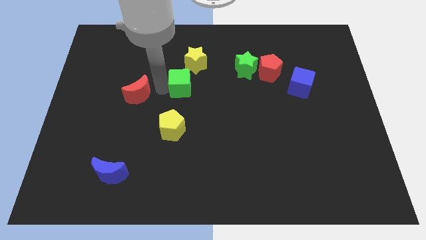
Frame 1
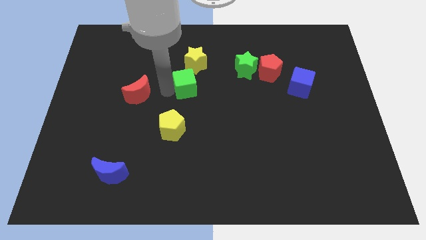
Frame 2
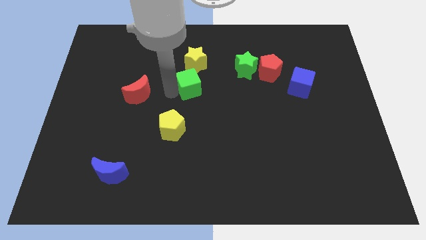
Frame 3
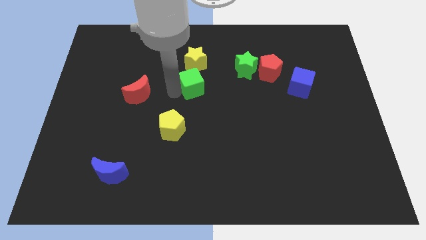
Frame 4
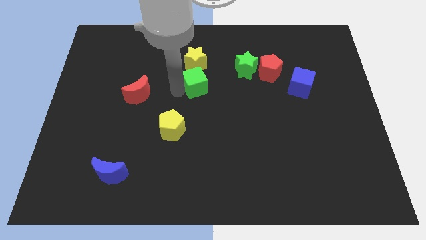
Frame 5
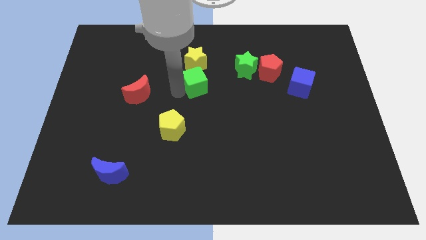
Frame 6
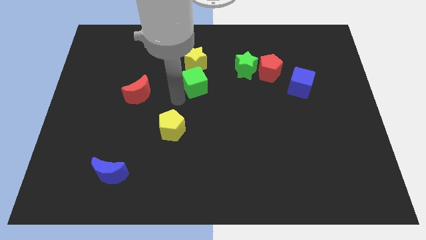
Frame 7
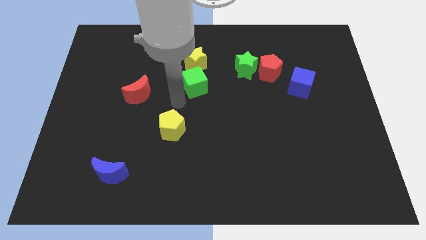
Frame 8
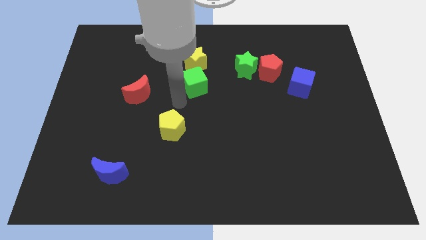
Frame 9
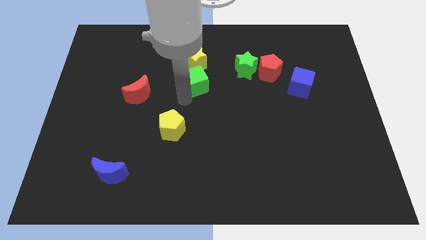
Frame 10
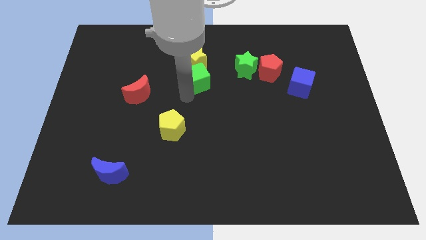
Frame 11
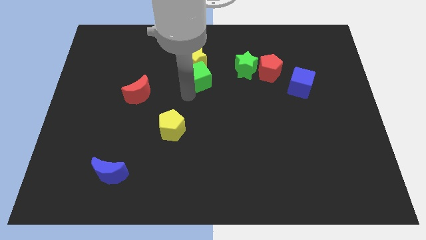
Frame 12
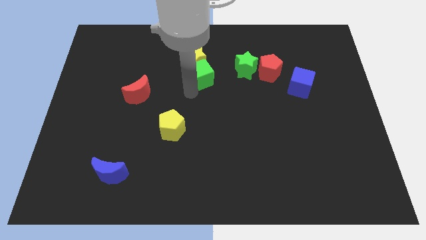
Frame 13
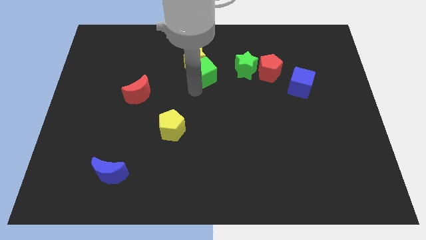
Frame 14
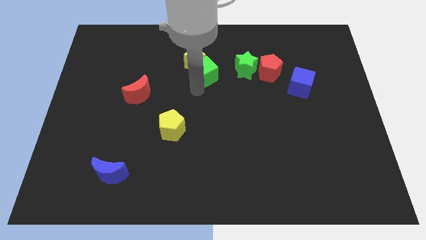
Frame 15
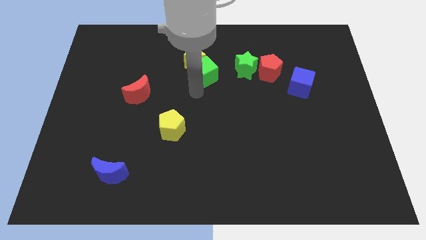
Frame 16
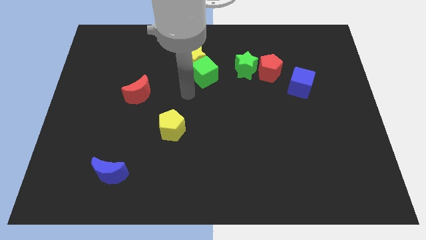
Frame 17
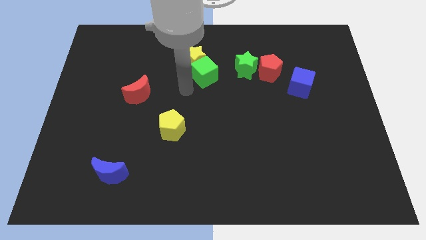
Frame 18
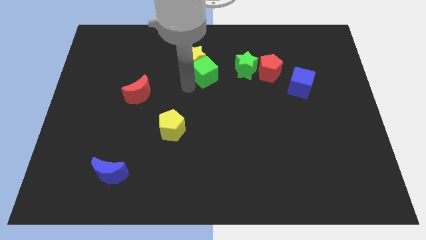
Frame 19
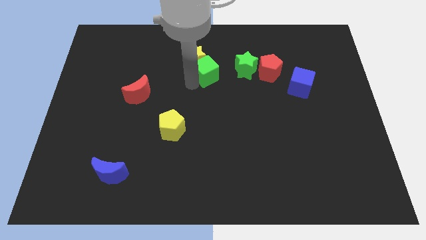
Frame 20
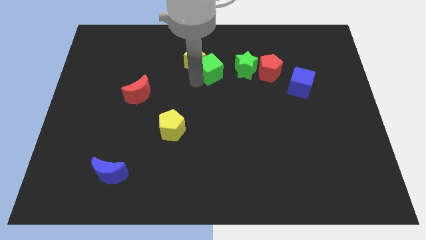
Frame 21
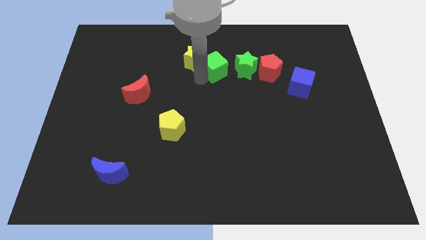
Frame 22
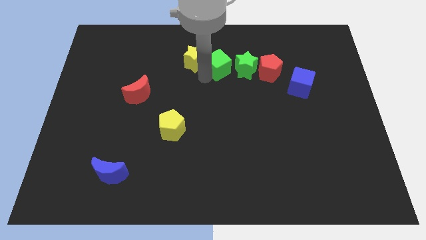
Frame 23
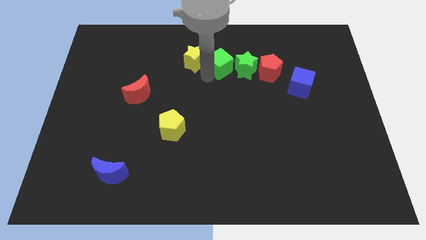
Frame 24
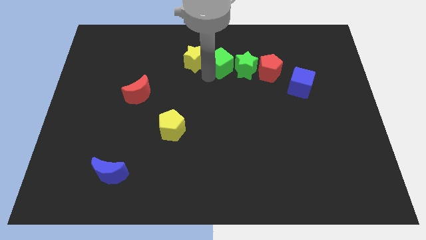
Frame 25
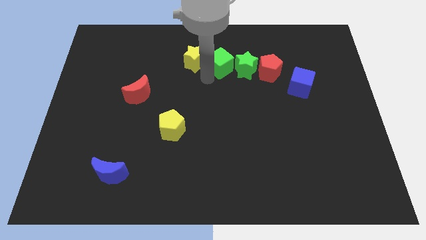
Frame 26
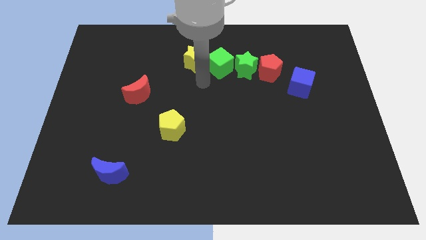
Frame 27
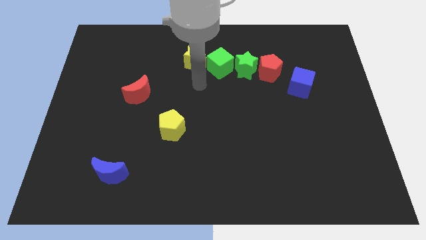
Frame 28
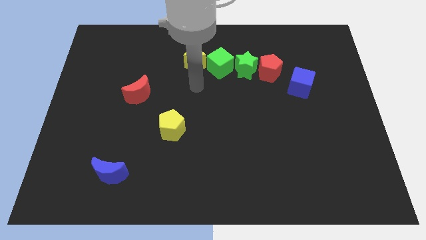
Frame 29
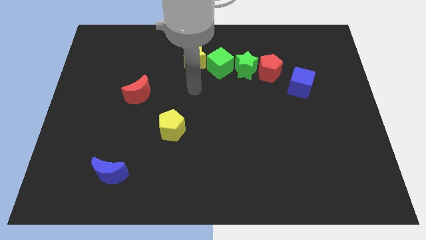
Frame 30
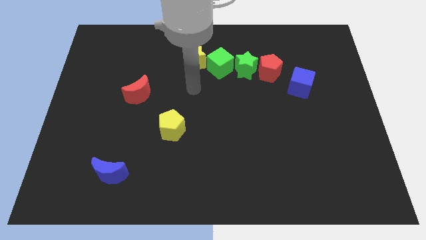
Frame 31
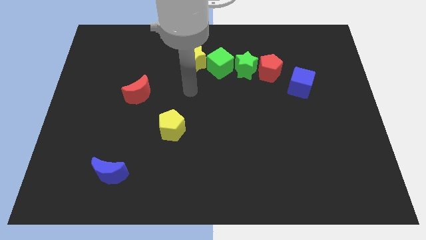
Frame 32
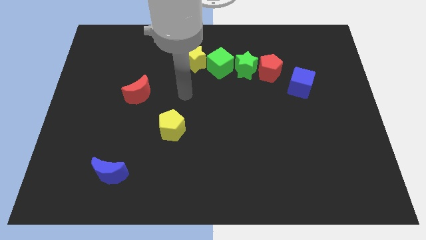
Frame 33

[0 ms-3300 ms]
push the green cube right to the green star

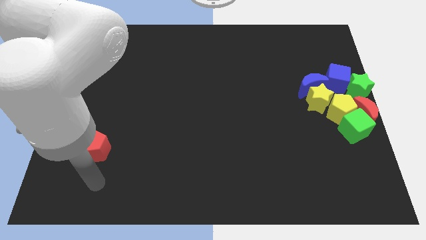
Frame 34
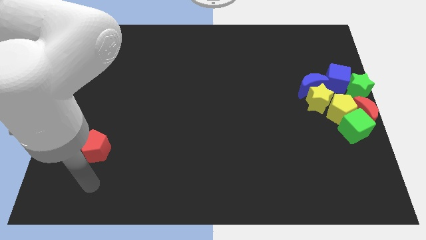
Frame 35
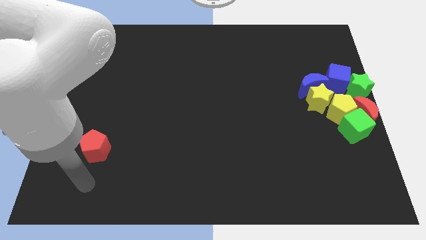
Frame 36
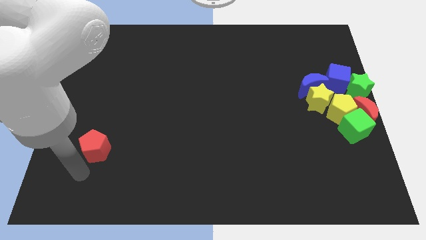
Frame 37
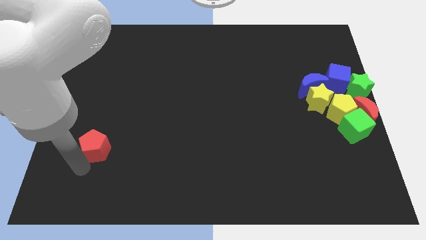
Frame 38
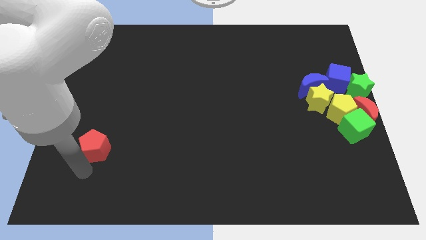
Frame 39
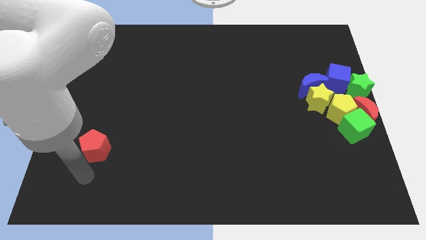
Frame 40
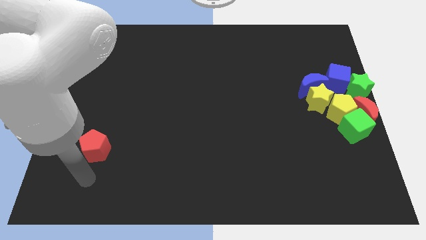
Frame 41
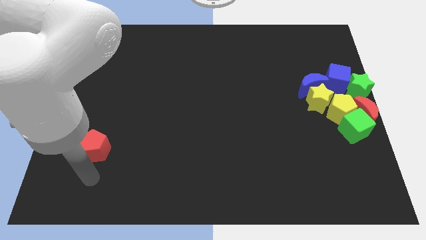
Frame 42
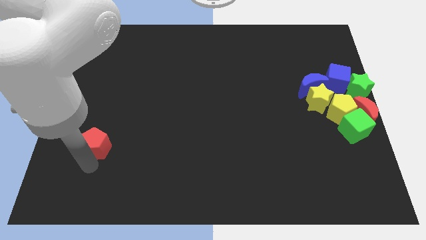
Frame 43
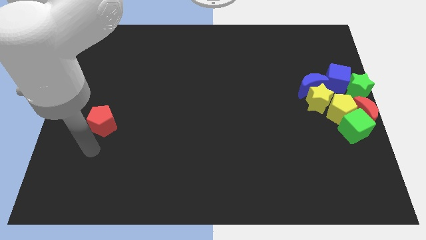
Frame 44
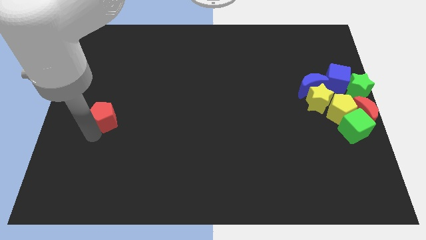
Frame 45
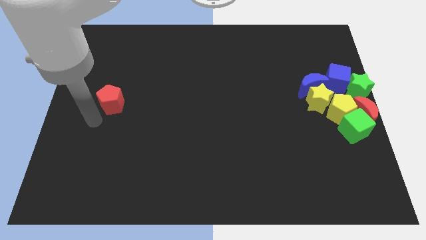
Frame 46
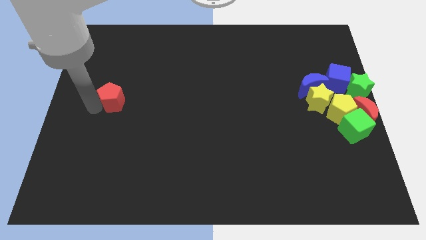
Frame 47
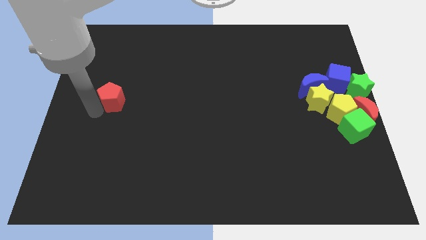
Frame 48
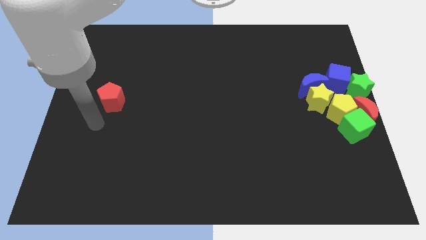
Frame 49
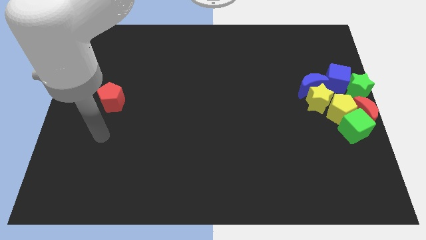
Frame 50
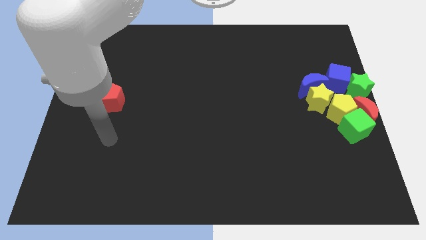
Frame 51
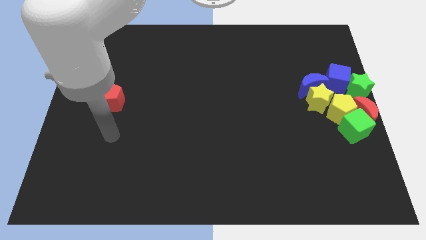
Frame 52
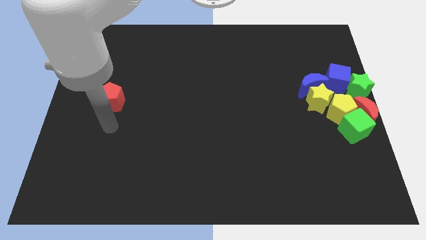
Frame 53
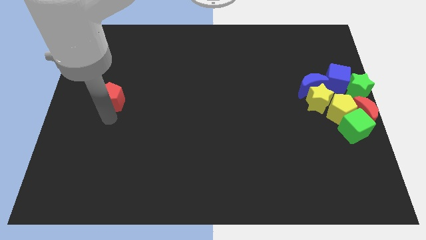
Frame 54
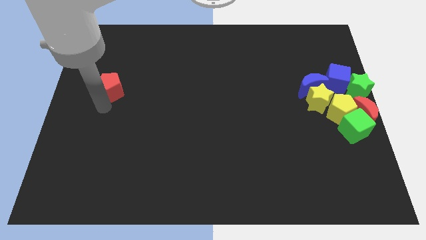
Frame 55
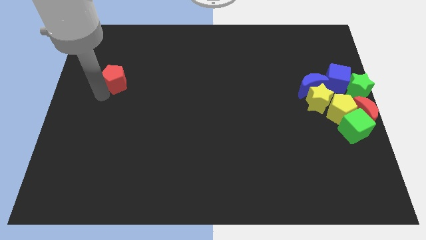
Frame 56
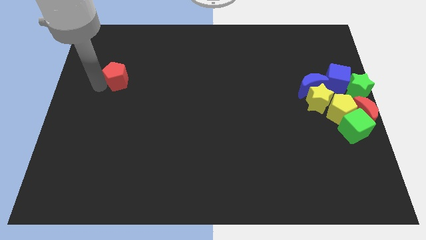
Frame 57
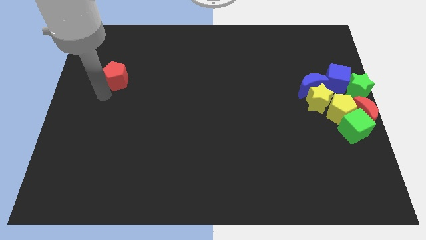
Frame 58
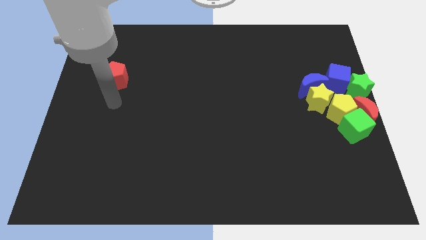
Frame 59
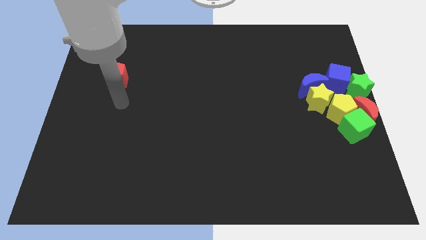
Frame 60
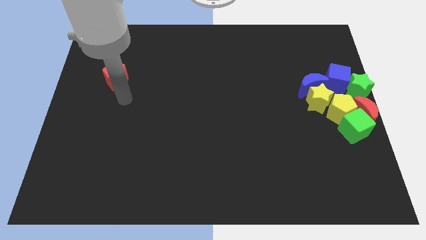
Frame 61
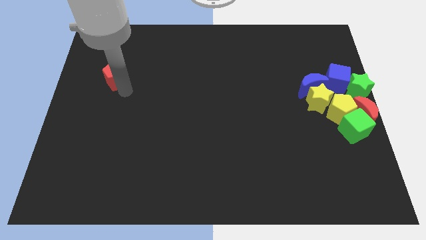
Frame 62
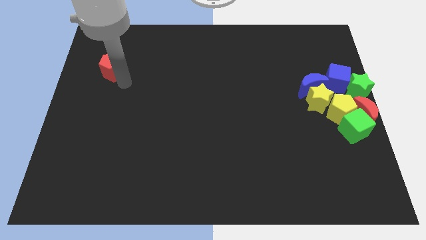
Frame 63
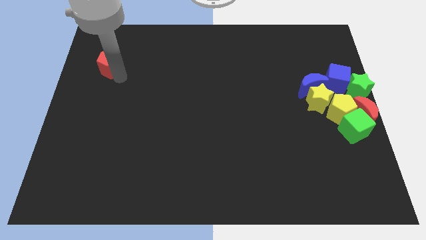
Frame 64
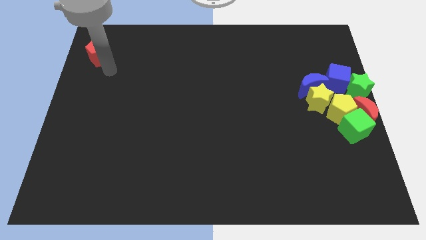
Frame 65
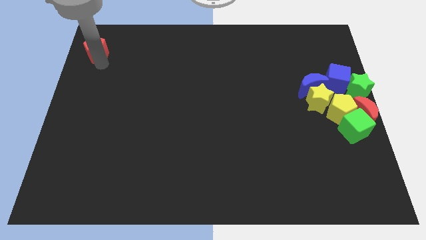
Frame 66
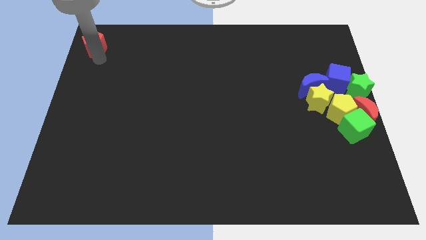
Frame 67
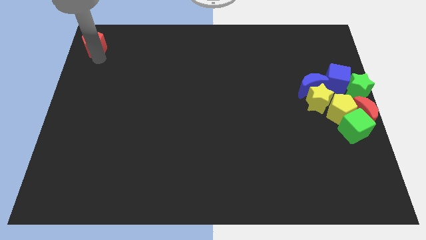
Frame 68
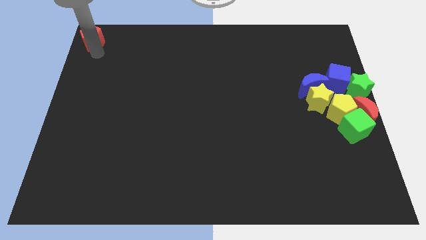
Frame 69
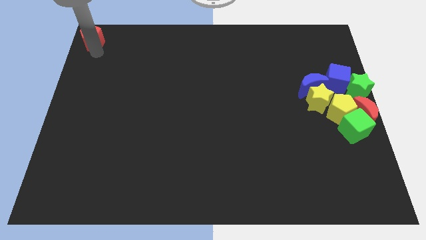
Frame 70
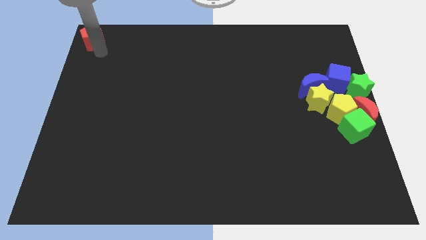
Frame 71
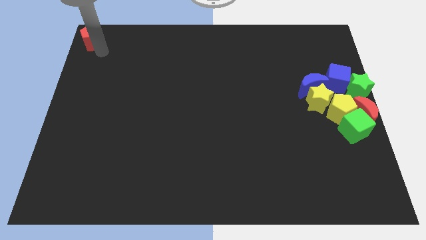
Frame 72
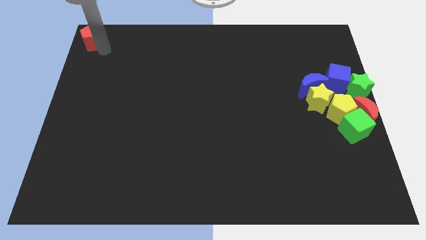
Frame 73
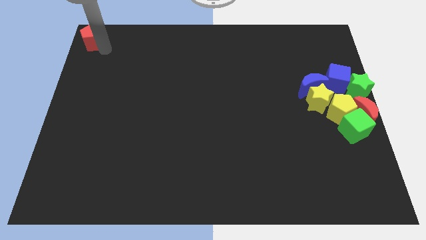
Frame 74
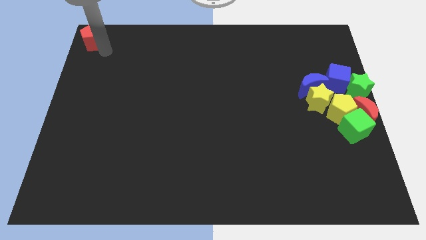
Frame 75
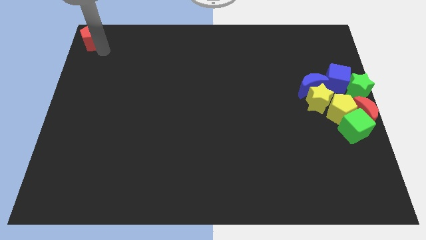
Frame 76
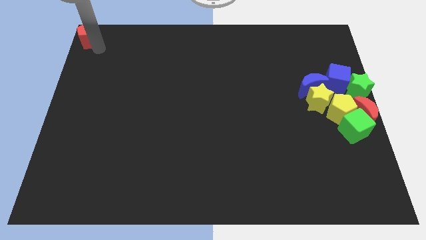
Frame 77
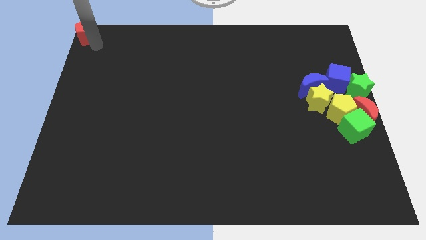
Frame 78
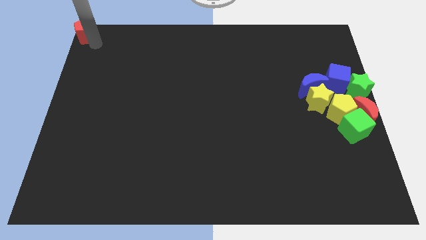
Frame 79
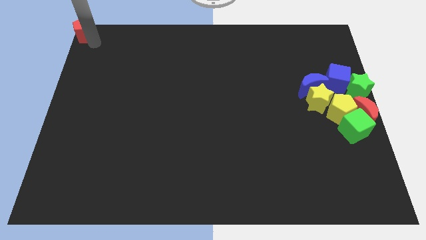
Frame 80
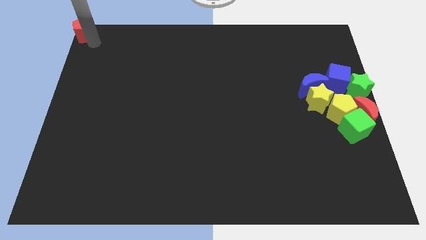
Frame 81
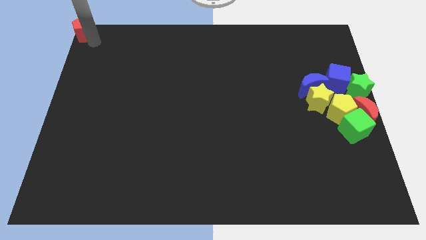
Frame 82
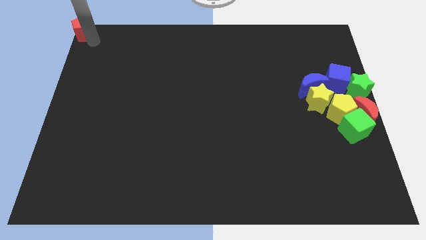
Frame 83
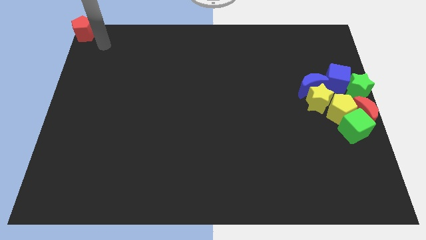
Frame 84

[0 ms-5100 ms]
place the red pentagon at the top left corner of the board

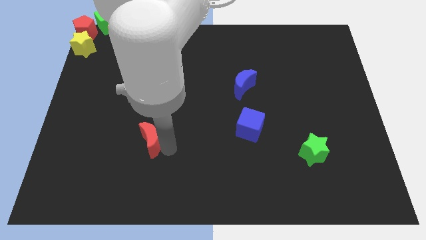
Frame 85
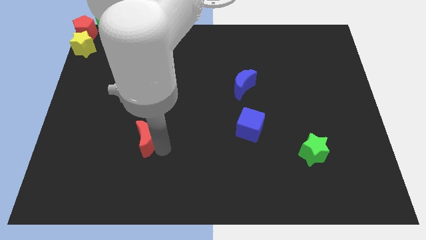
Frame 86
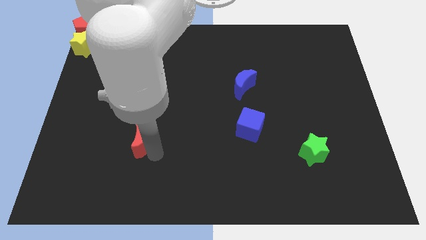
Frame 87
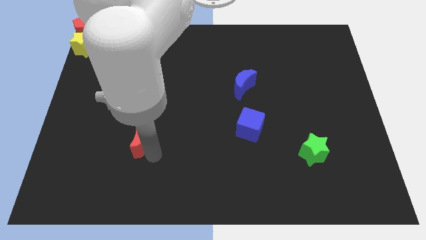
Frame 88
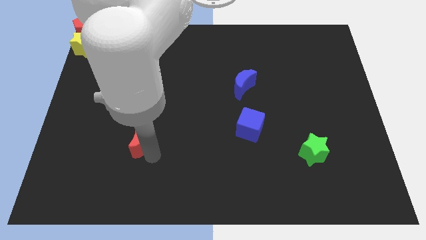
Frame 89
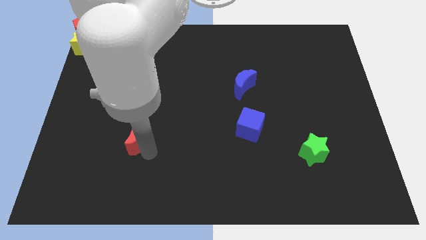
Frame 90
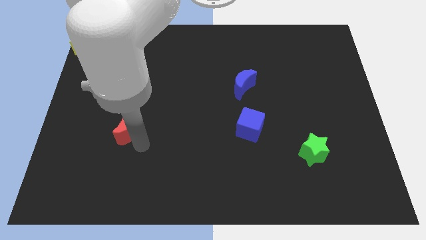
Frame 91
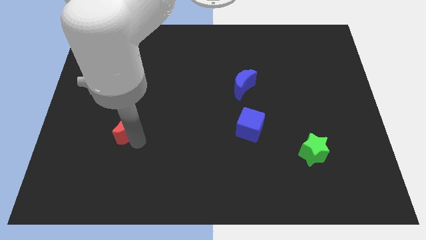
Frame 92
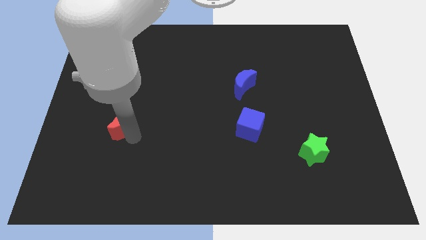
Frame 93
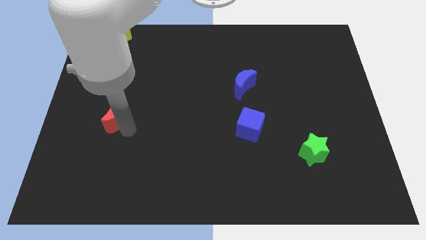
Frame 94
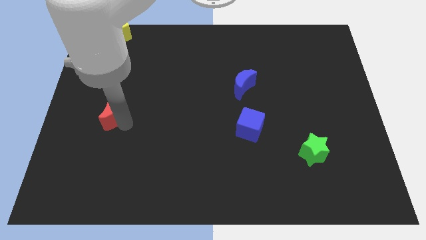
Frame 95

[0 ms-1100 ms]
move the red crescent to the centre left of the board
